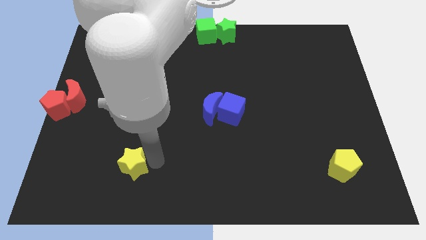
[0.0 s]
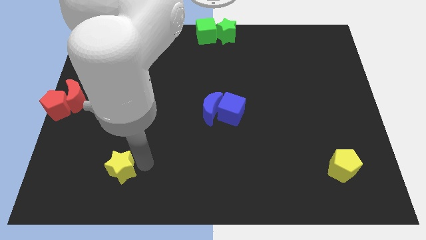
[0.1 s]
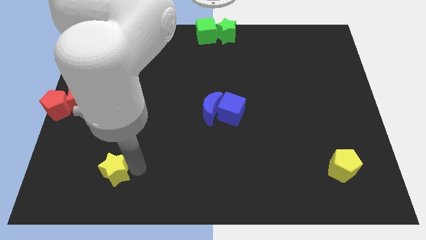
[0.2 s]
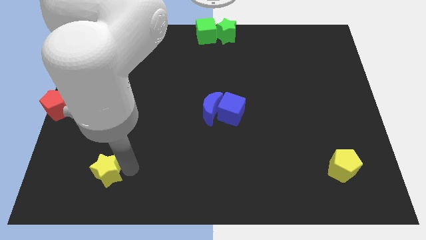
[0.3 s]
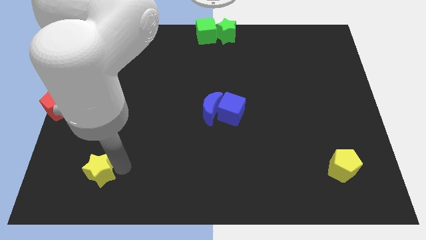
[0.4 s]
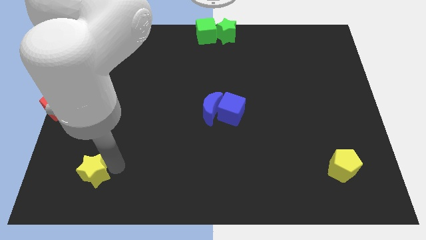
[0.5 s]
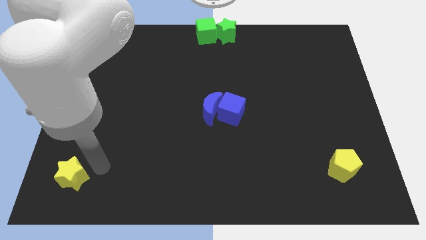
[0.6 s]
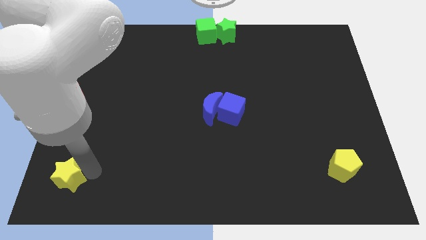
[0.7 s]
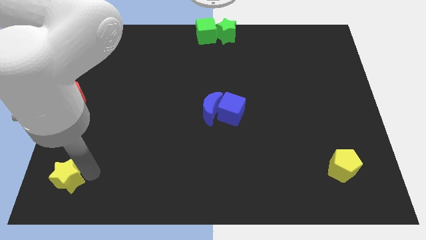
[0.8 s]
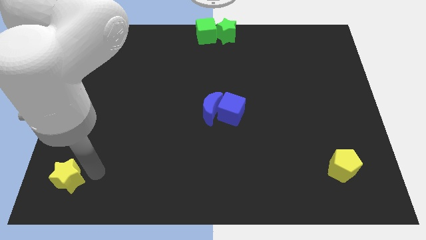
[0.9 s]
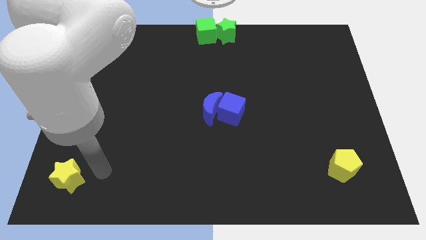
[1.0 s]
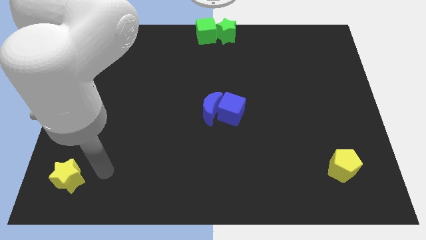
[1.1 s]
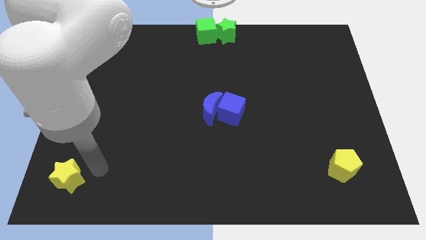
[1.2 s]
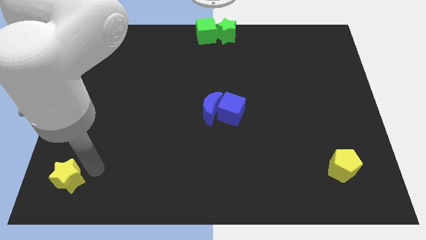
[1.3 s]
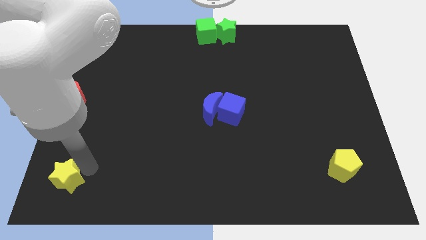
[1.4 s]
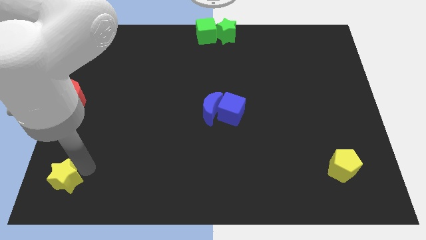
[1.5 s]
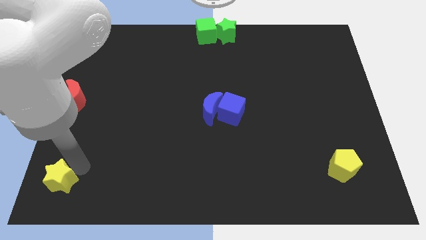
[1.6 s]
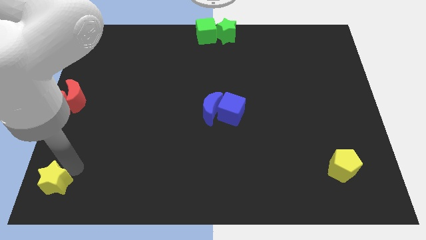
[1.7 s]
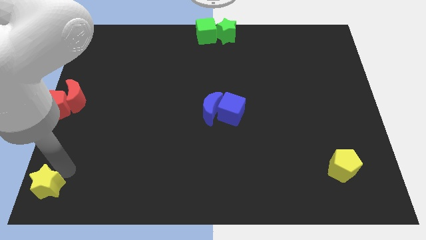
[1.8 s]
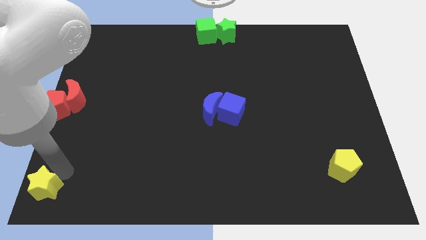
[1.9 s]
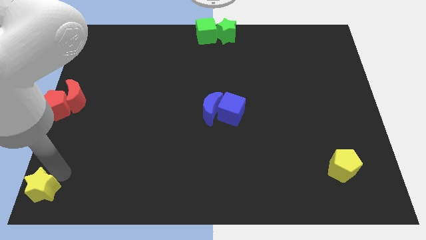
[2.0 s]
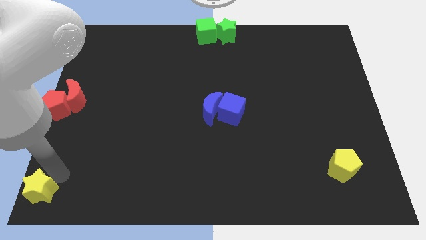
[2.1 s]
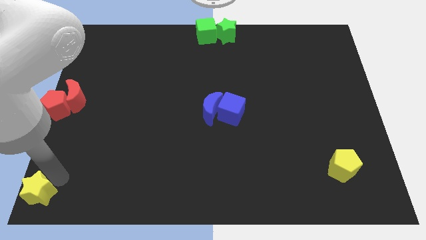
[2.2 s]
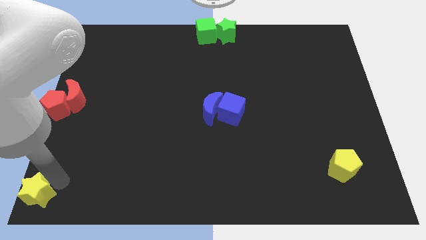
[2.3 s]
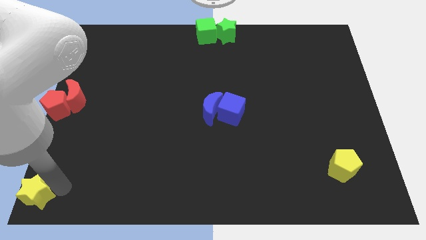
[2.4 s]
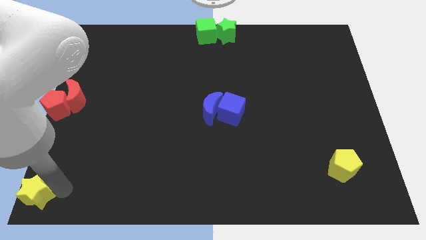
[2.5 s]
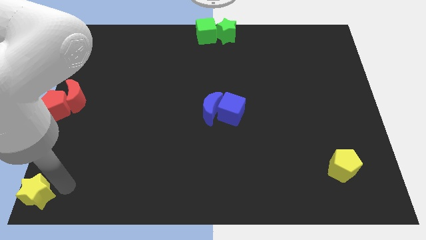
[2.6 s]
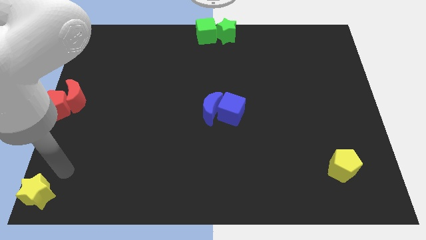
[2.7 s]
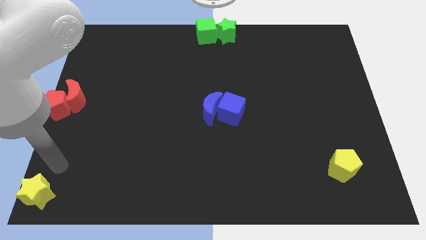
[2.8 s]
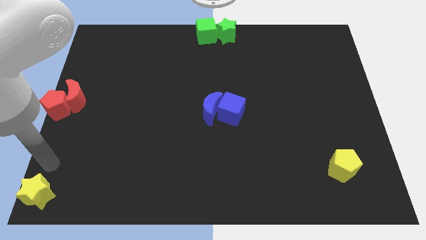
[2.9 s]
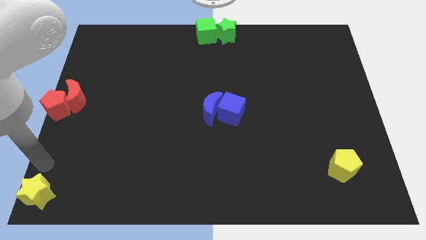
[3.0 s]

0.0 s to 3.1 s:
place the yellow star at the bottom left corner of the board

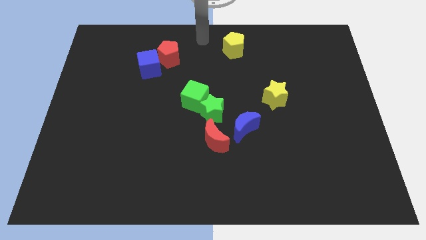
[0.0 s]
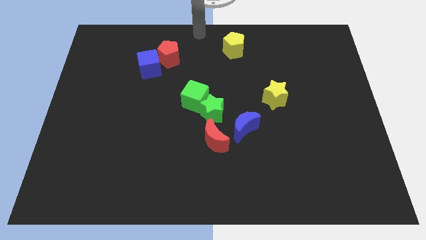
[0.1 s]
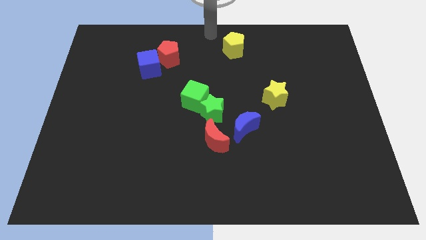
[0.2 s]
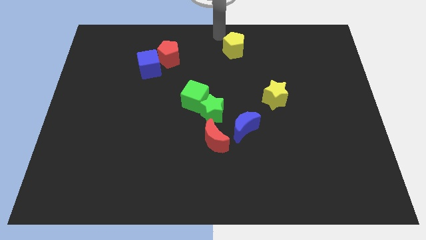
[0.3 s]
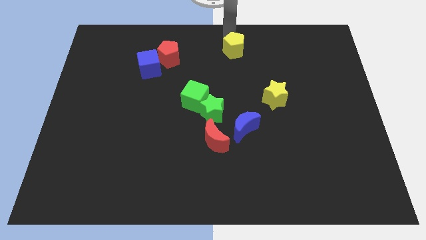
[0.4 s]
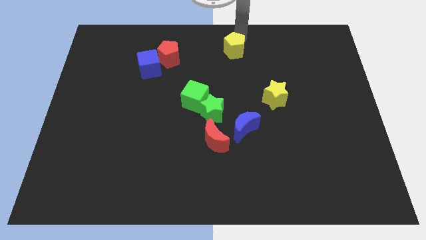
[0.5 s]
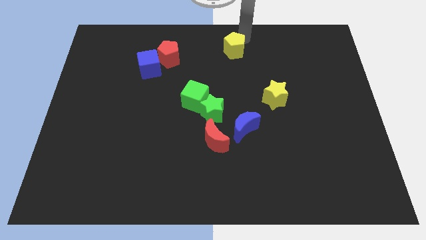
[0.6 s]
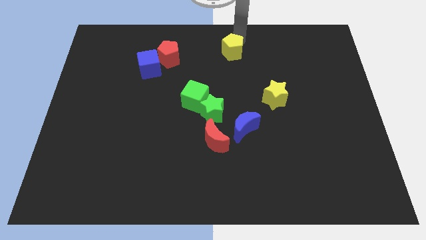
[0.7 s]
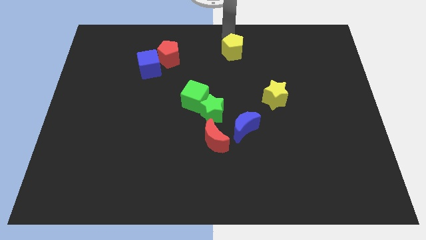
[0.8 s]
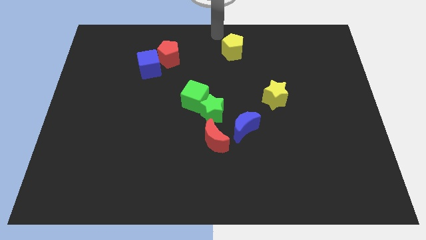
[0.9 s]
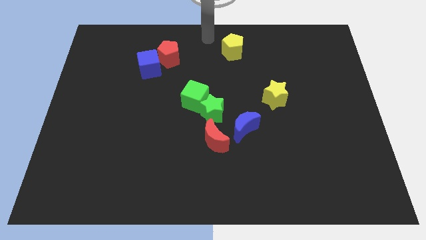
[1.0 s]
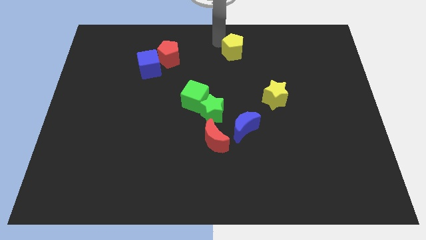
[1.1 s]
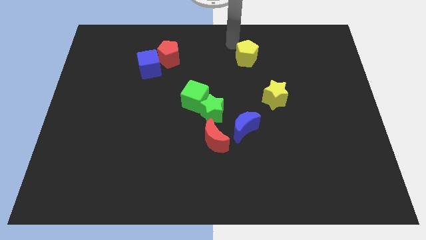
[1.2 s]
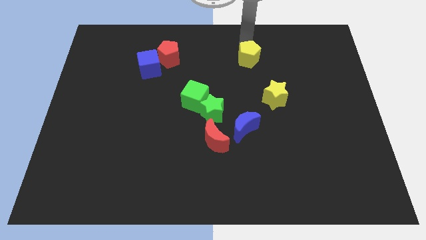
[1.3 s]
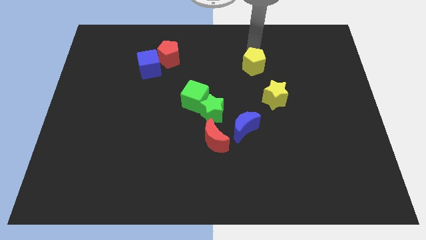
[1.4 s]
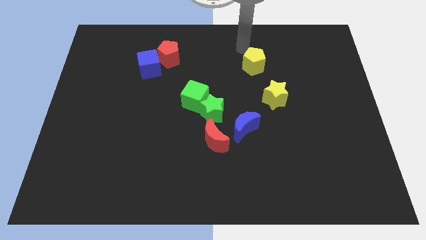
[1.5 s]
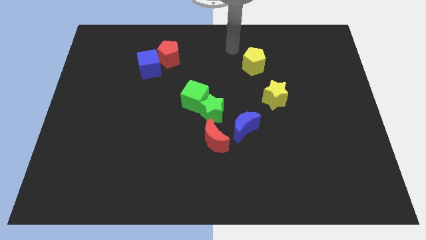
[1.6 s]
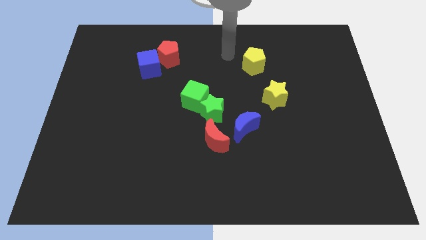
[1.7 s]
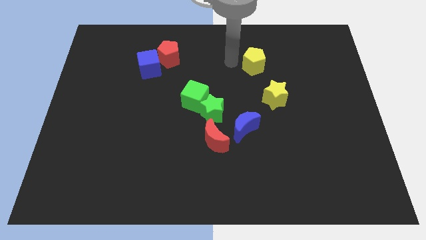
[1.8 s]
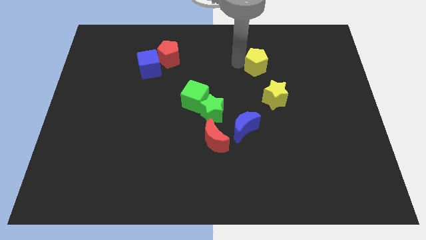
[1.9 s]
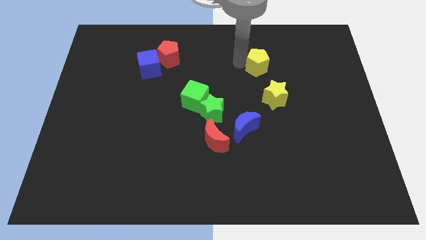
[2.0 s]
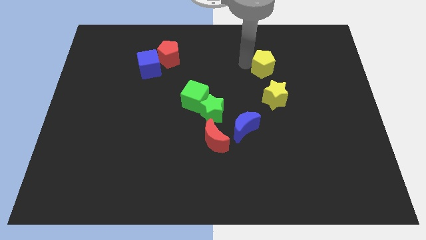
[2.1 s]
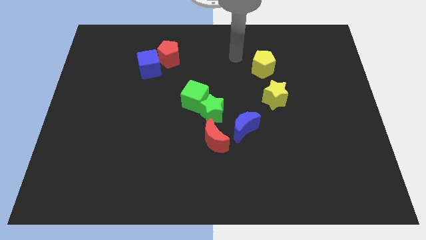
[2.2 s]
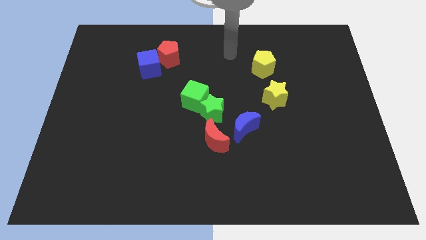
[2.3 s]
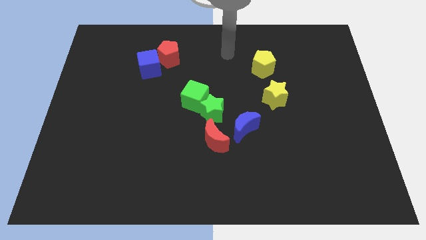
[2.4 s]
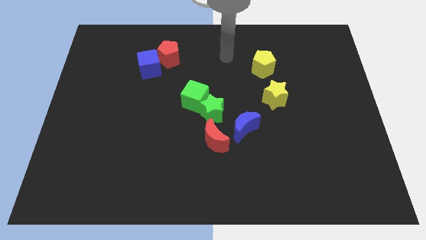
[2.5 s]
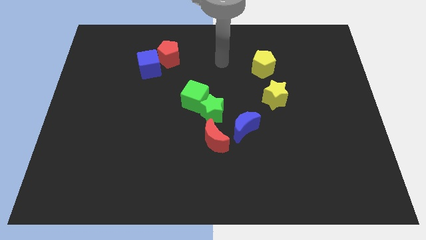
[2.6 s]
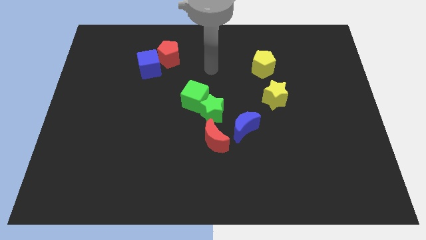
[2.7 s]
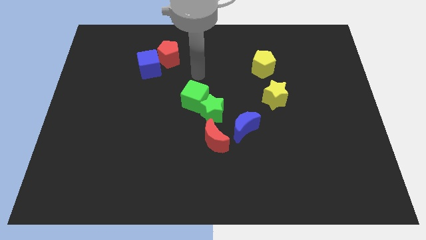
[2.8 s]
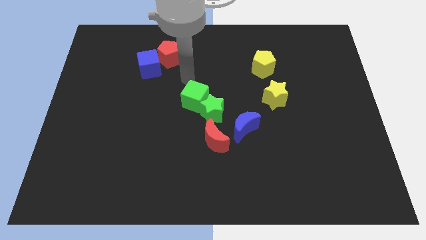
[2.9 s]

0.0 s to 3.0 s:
put the yellow pentagon at the top left side of the yellow star

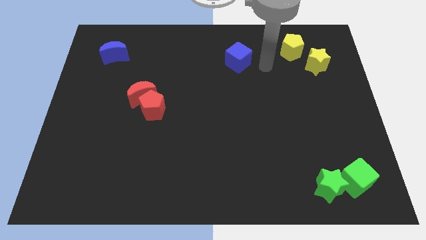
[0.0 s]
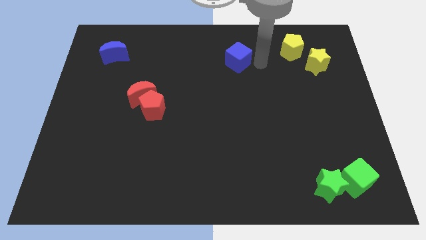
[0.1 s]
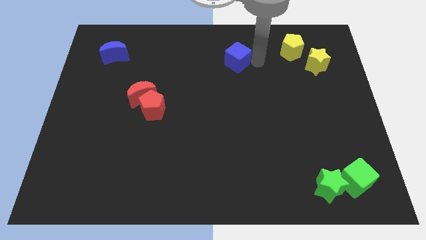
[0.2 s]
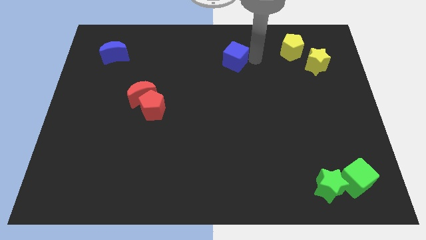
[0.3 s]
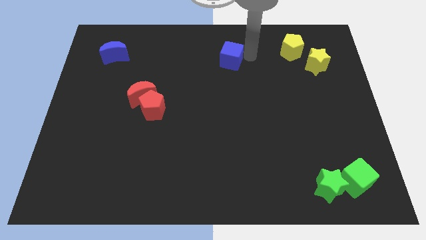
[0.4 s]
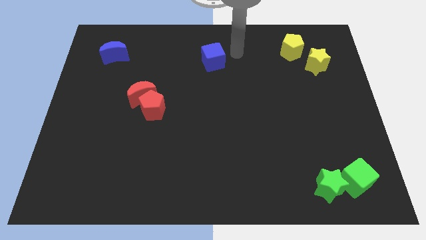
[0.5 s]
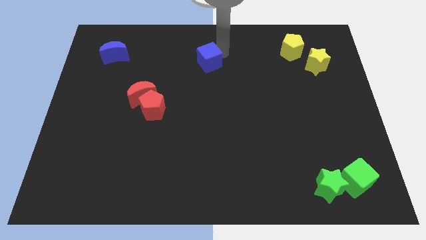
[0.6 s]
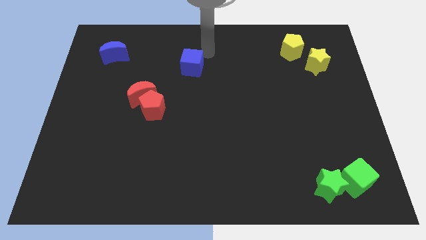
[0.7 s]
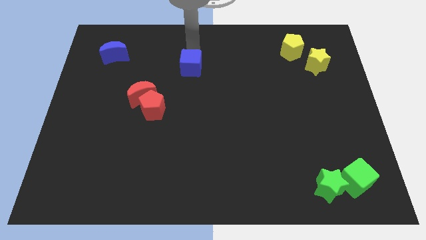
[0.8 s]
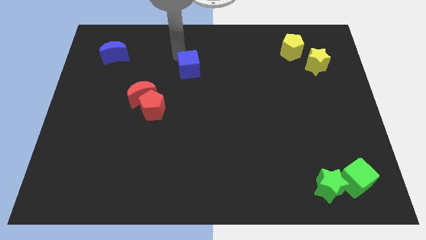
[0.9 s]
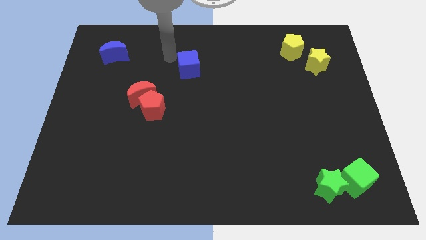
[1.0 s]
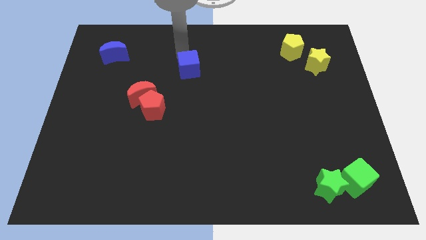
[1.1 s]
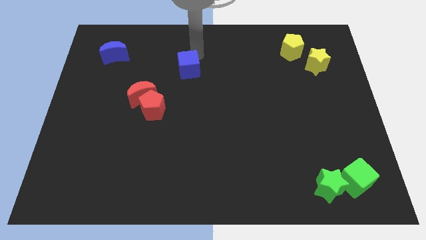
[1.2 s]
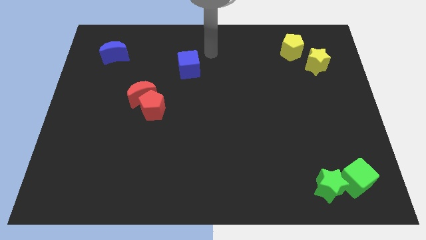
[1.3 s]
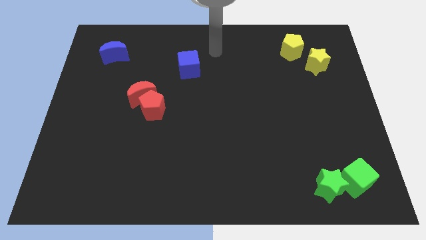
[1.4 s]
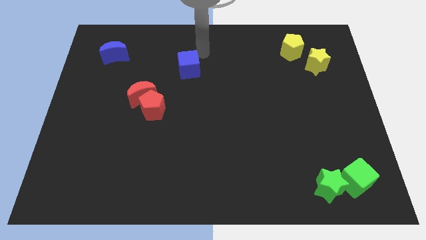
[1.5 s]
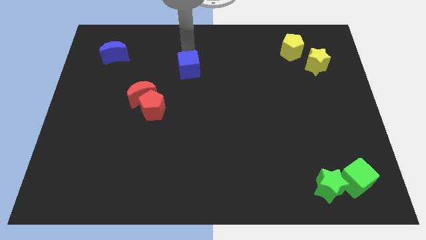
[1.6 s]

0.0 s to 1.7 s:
move the blue cube towards left side of the board

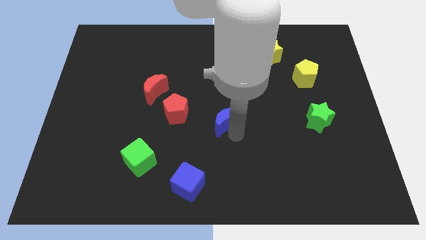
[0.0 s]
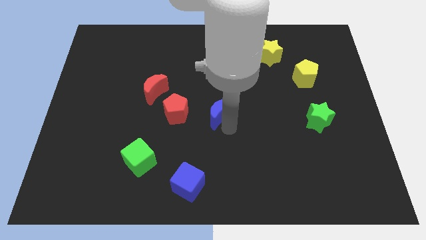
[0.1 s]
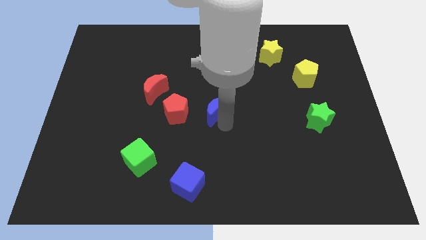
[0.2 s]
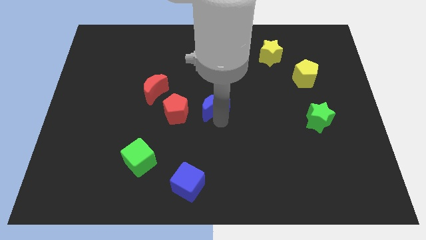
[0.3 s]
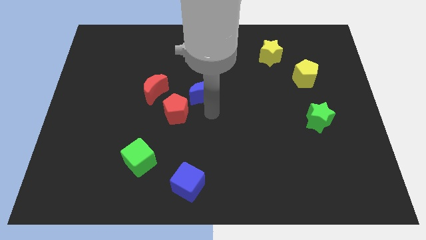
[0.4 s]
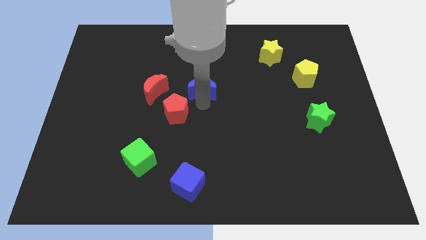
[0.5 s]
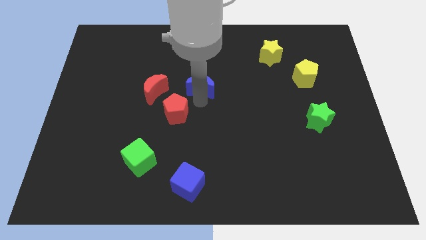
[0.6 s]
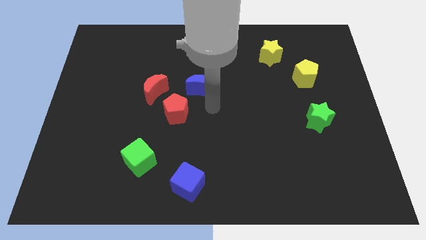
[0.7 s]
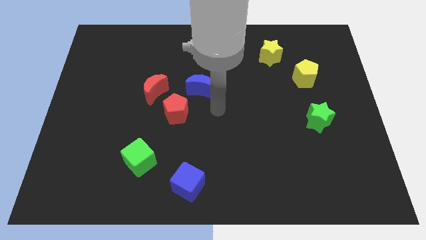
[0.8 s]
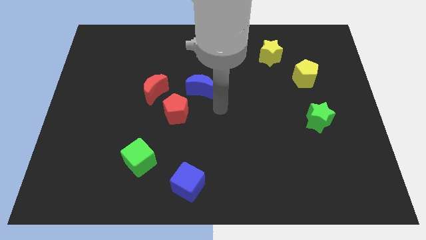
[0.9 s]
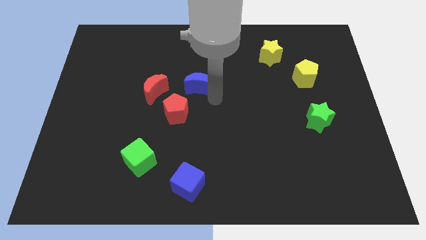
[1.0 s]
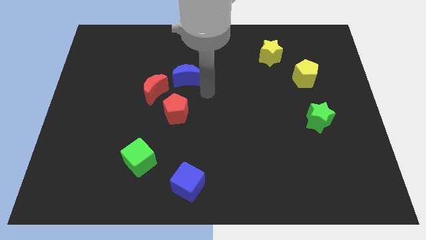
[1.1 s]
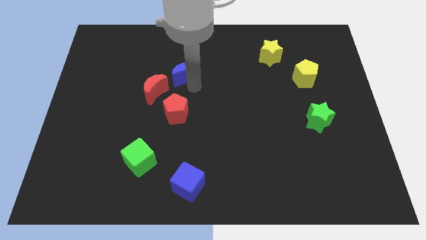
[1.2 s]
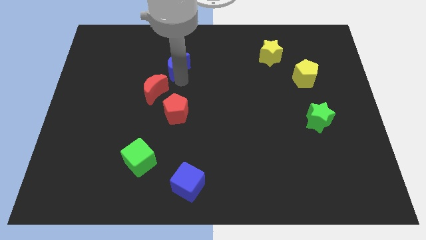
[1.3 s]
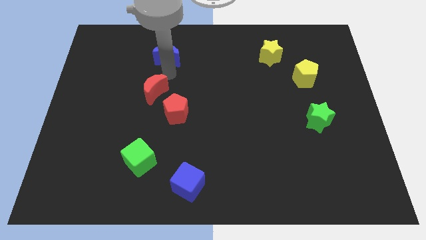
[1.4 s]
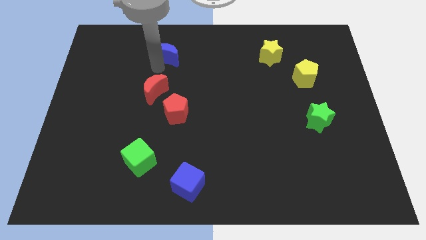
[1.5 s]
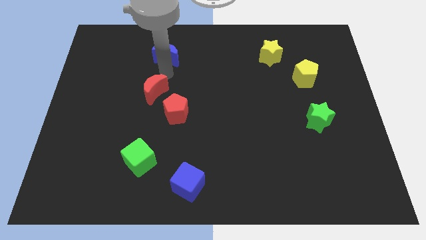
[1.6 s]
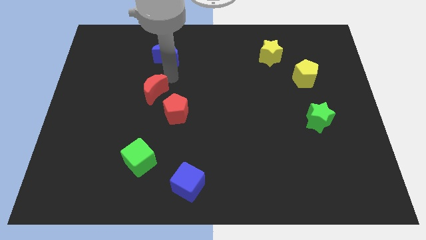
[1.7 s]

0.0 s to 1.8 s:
put the blue crescent above the red crescent
